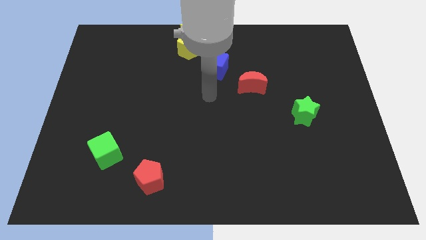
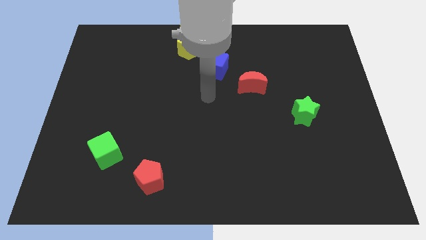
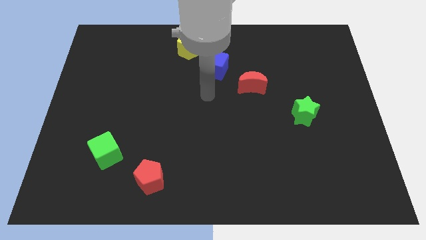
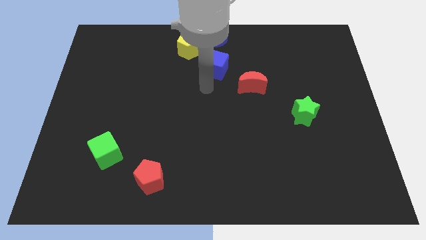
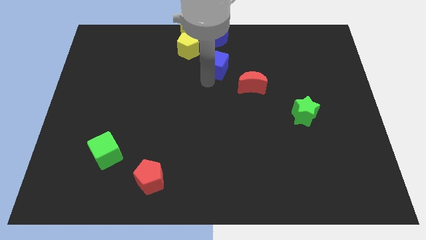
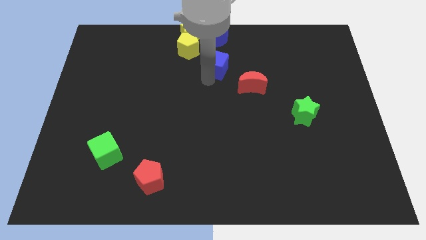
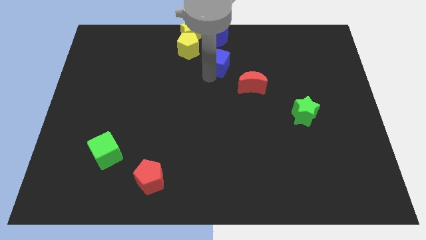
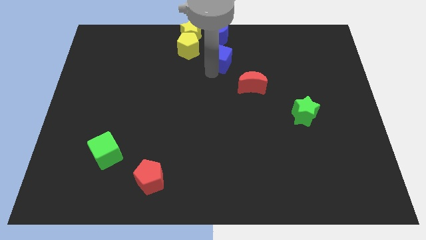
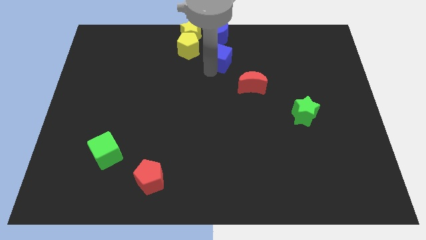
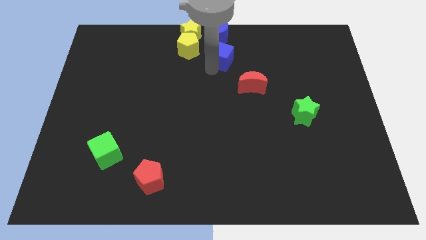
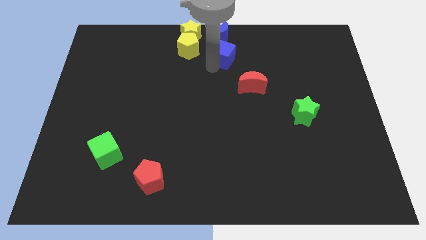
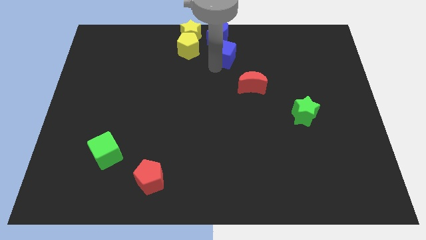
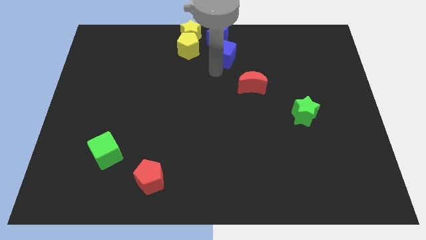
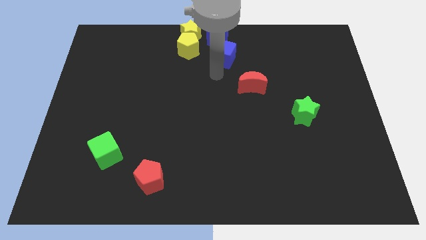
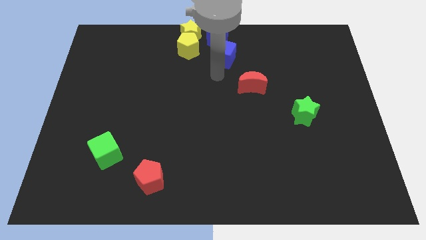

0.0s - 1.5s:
move the blue cube to the bottom side of the blue crescent

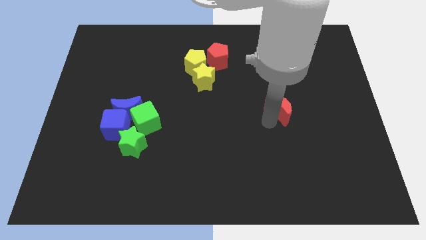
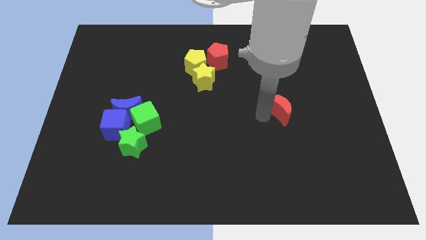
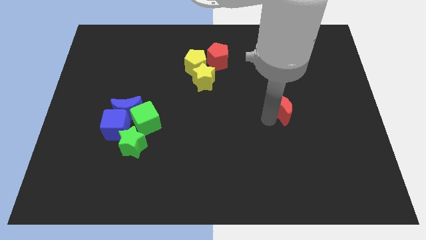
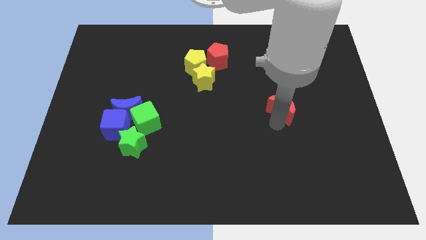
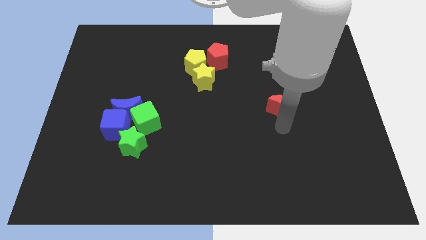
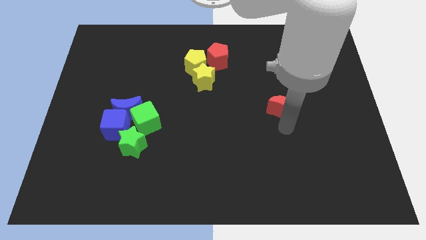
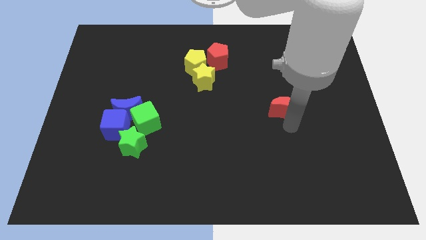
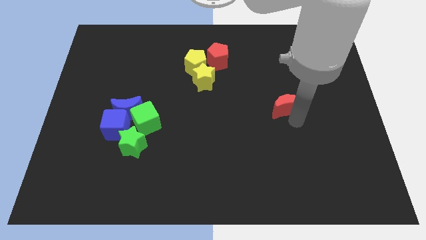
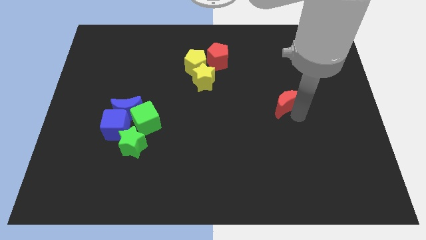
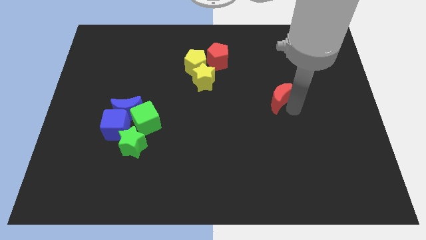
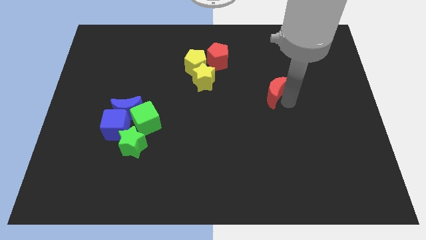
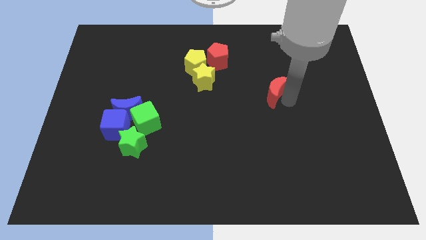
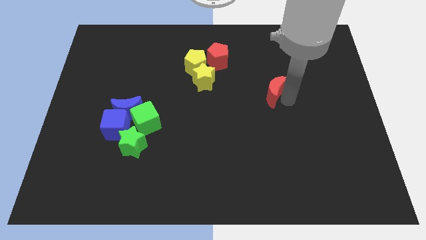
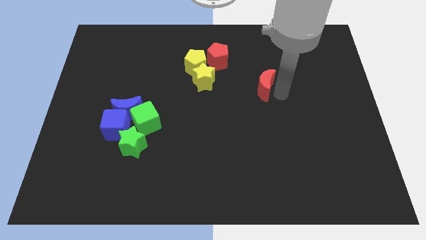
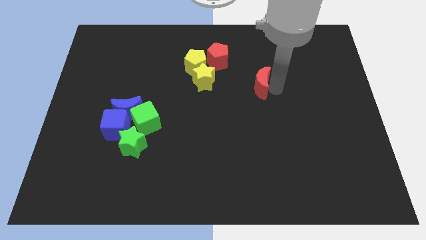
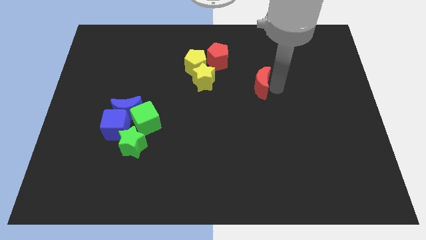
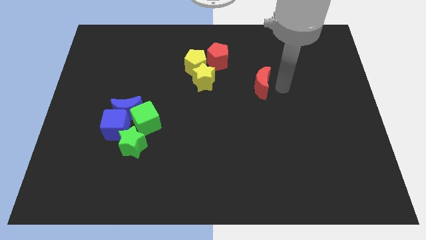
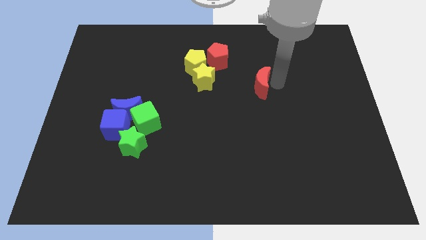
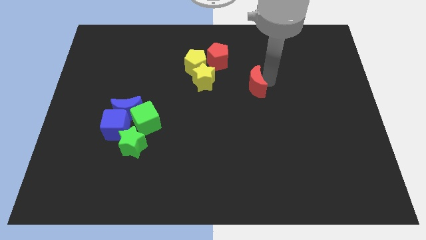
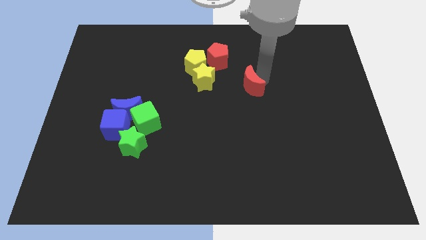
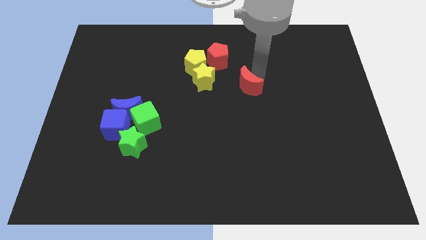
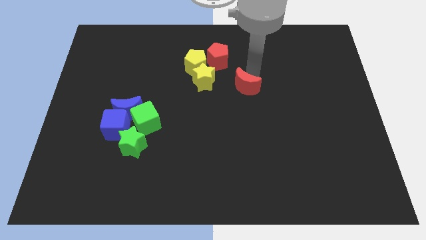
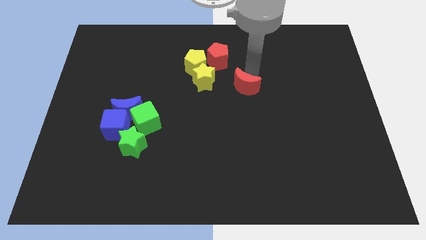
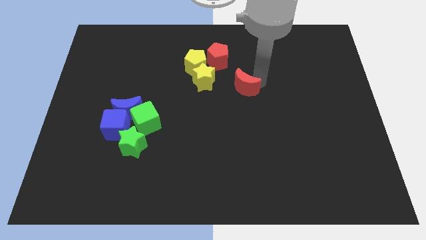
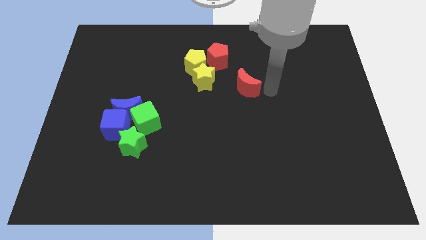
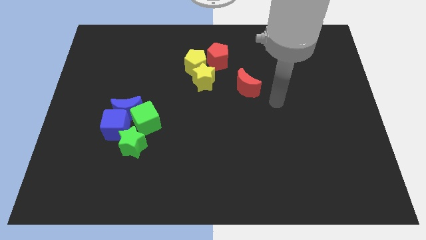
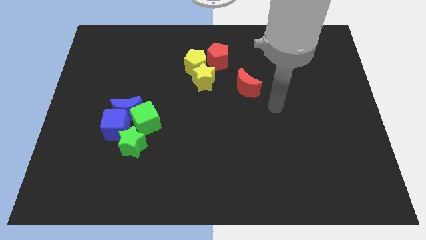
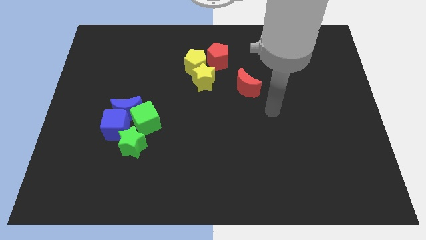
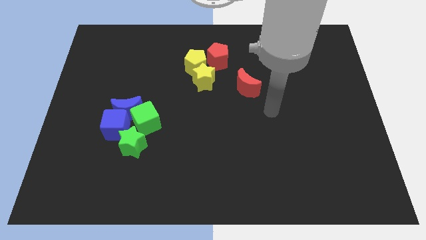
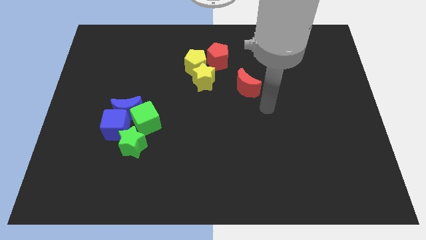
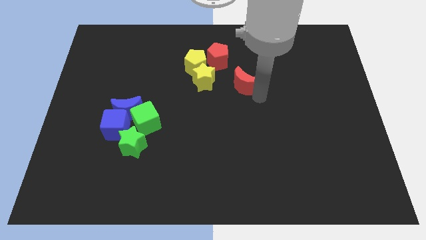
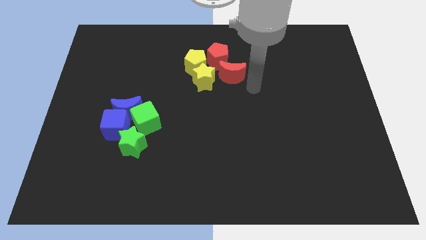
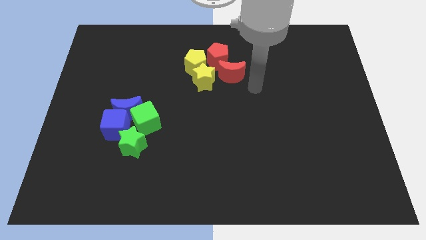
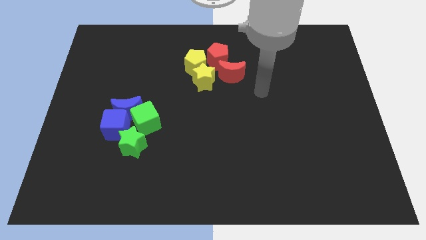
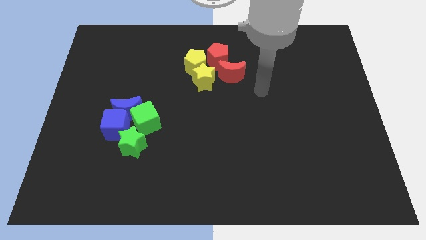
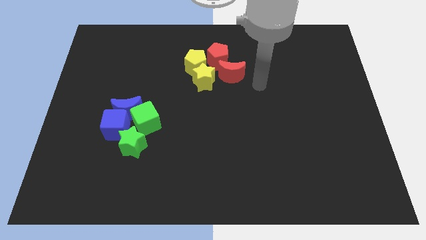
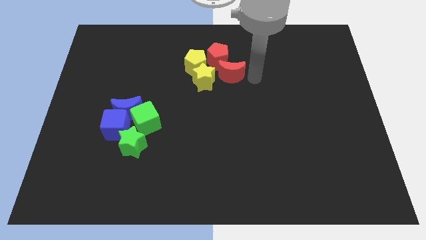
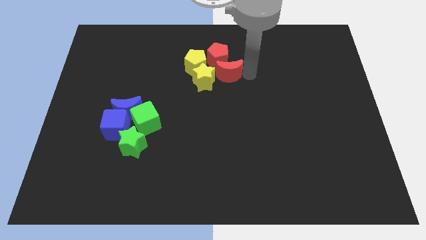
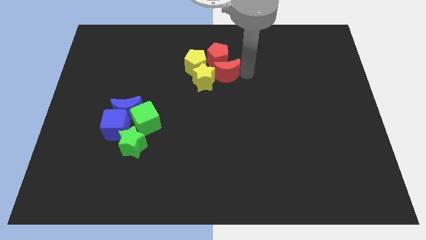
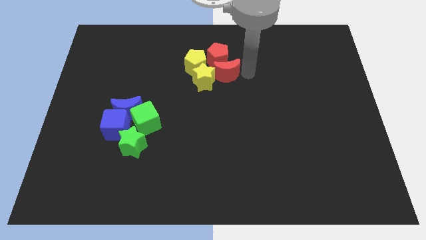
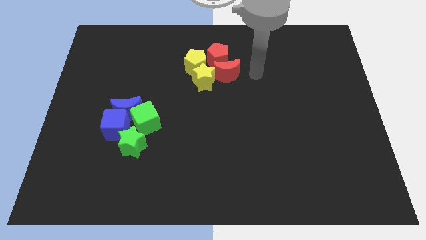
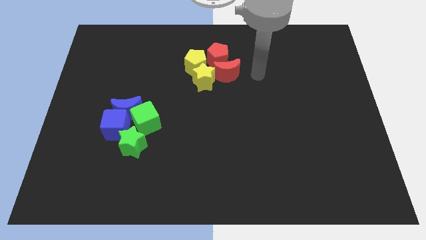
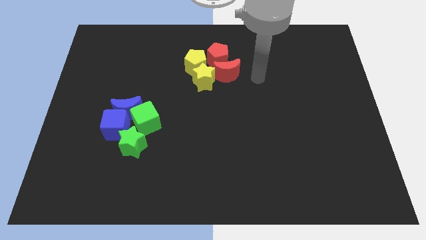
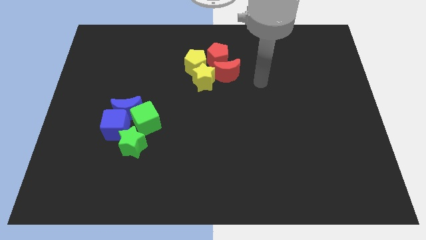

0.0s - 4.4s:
move the red crescent below the red pentagon

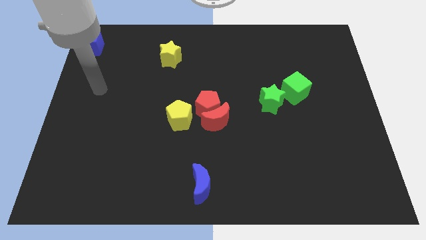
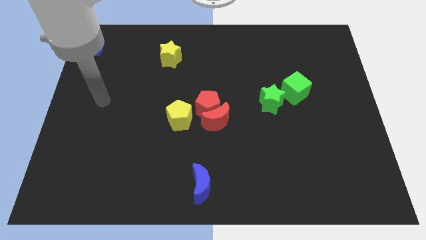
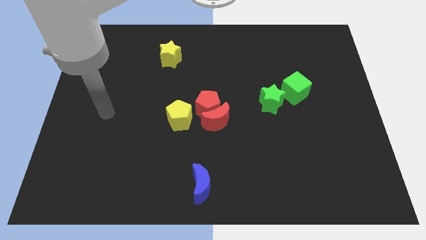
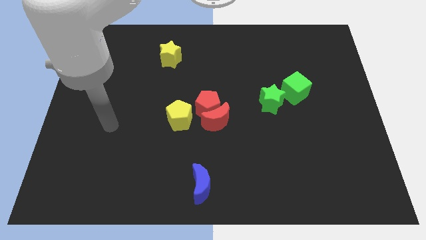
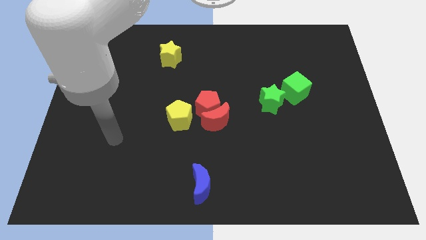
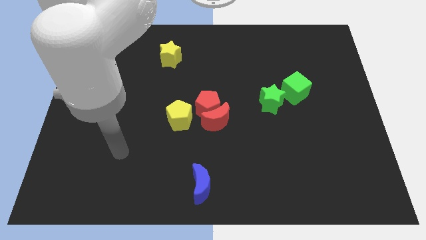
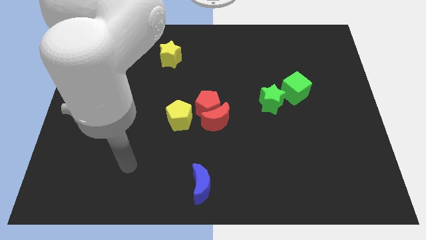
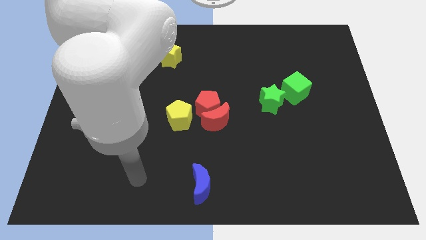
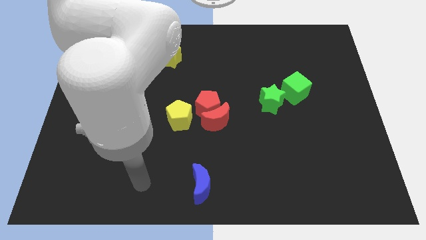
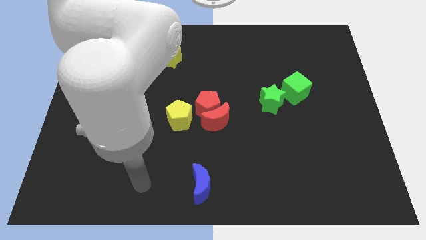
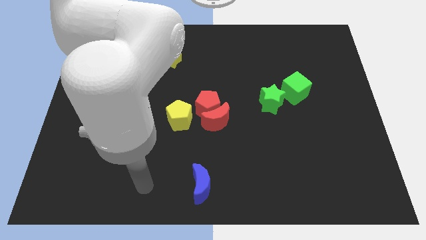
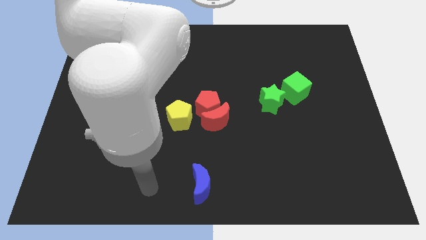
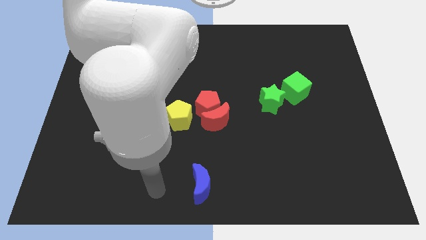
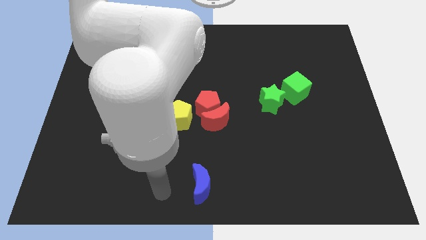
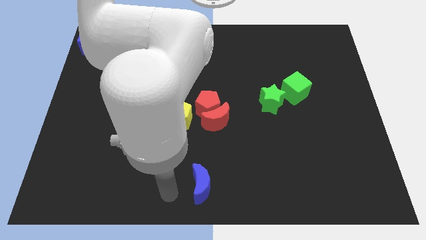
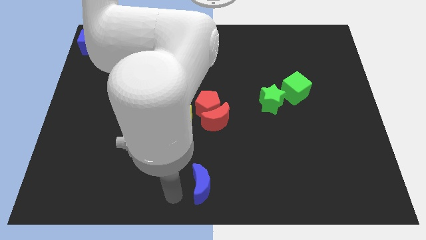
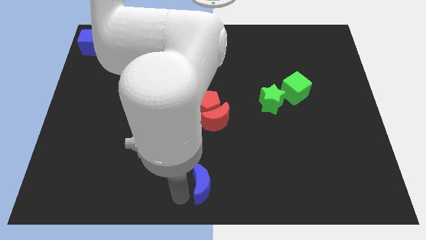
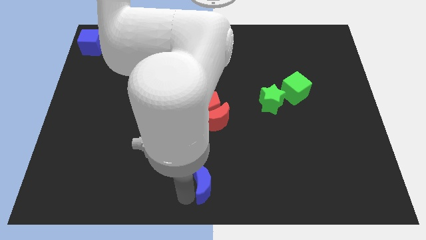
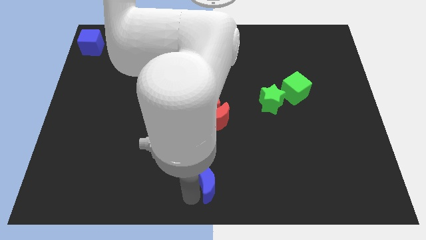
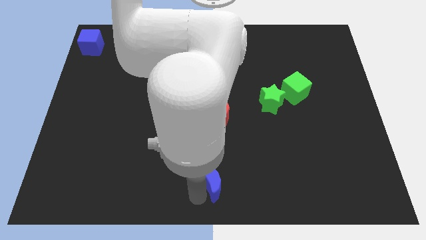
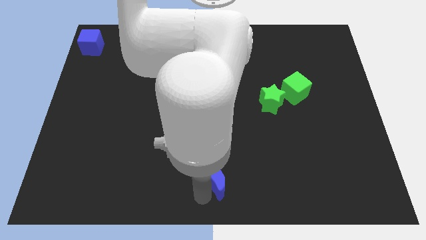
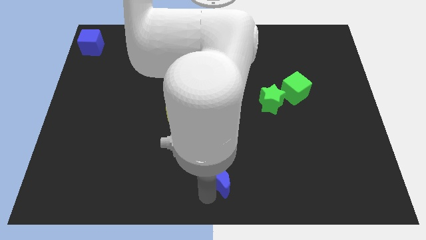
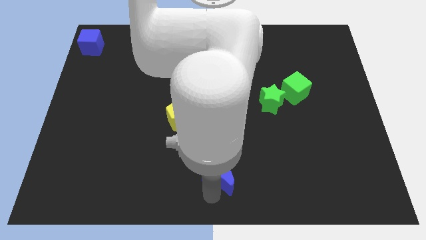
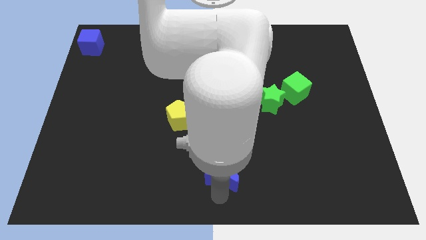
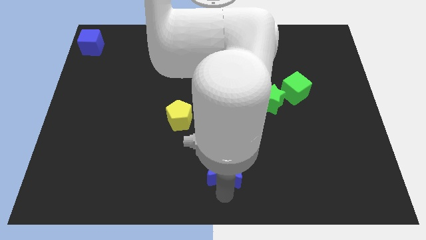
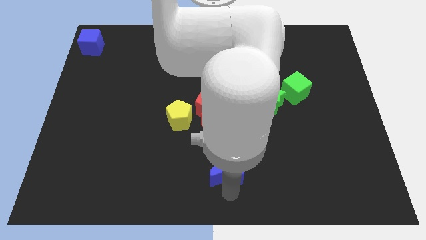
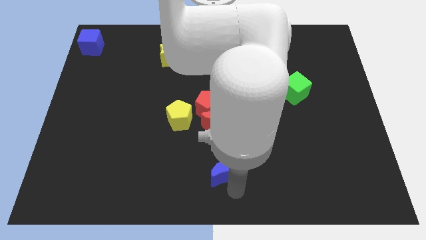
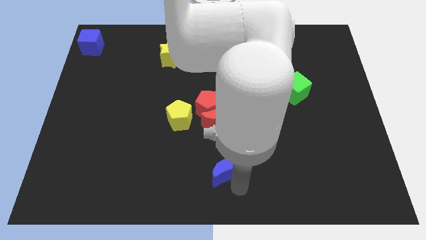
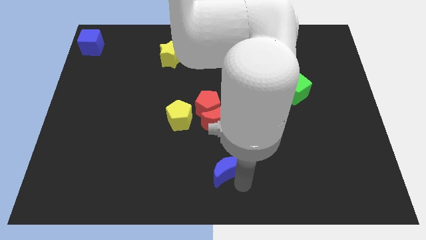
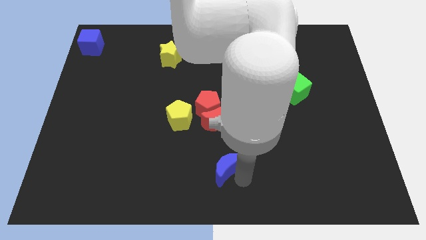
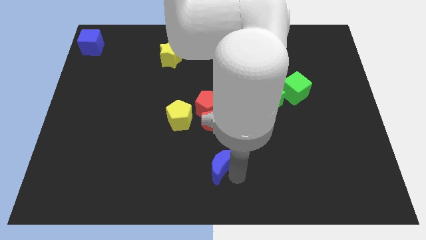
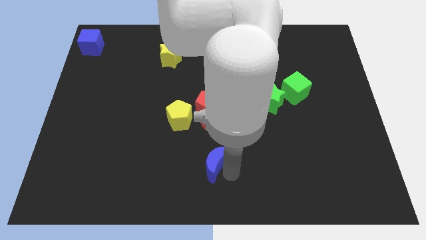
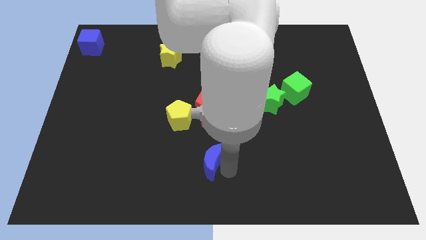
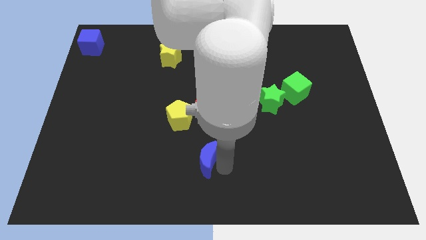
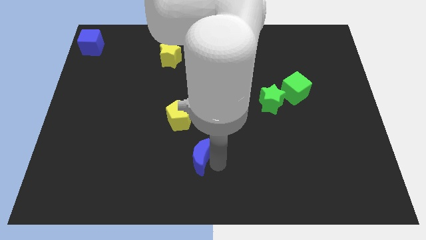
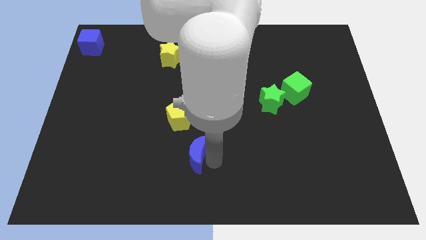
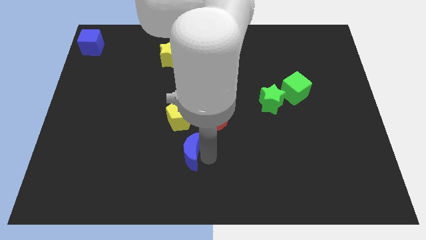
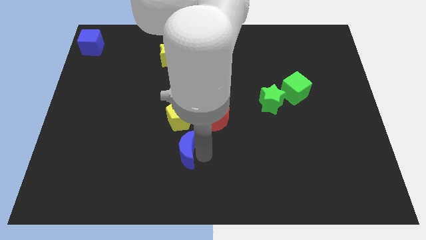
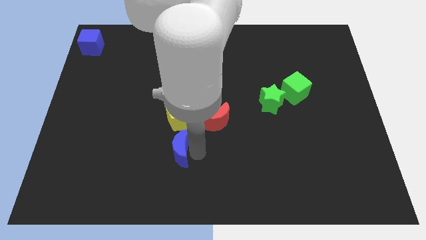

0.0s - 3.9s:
move the blue crescent towards the bottom side of the yellow pentagon
